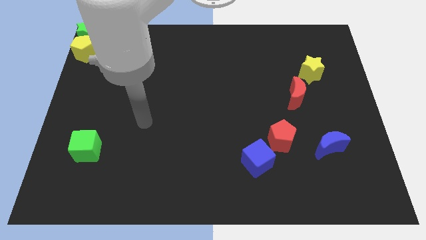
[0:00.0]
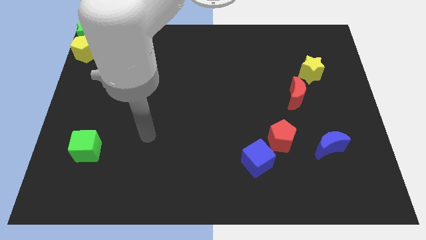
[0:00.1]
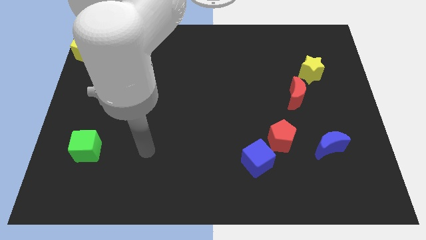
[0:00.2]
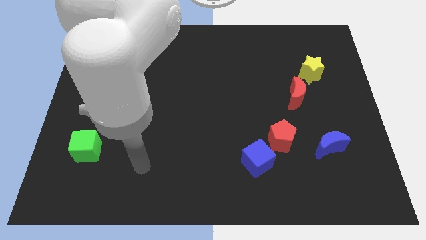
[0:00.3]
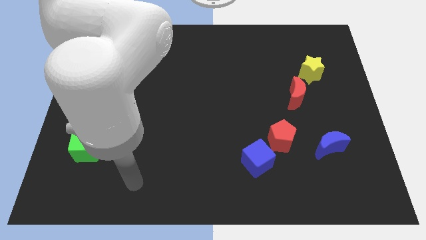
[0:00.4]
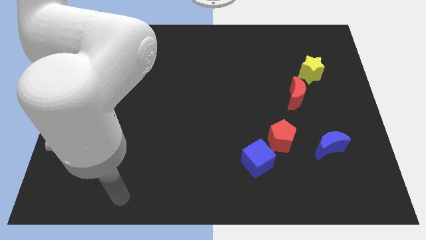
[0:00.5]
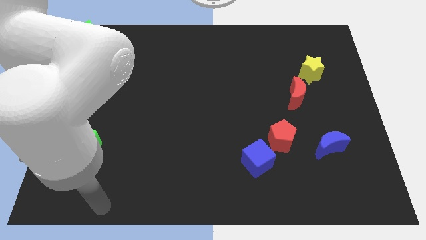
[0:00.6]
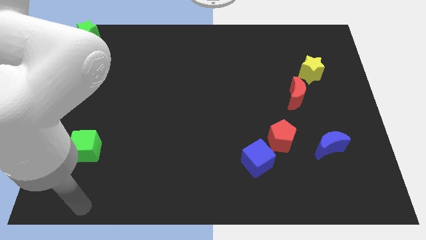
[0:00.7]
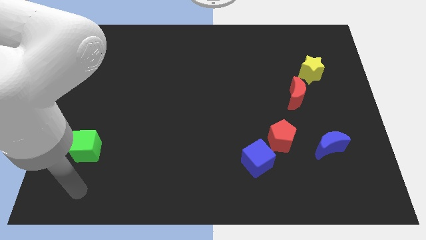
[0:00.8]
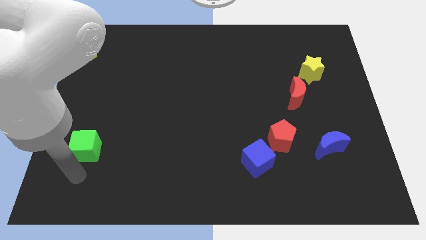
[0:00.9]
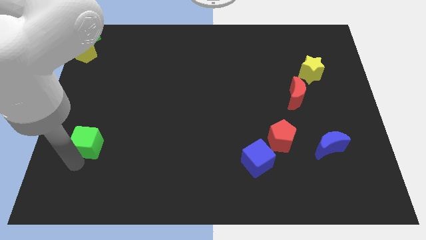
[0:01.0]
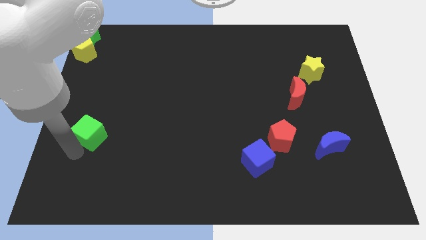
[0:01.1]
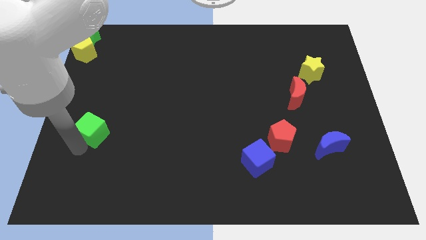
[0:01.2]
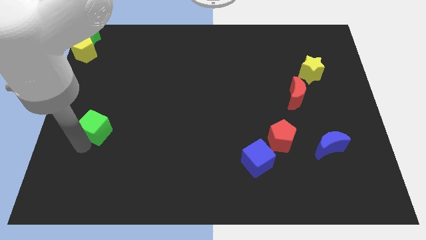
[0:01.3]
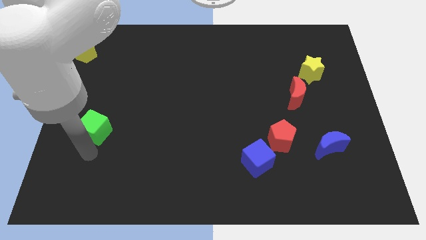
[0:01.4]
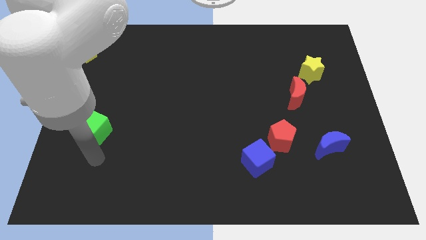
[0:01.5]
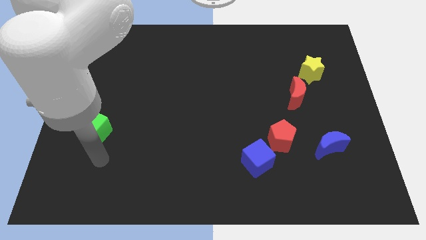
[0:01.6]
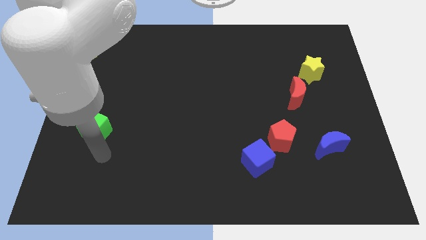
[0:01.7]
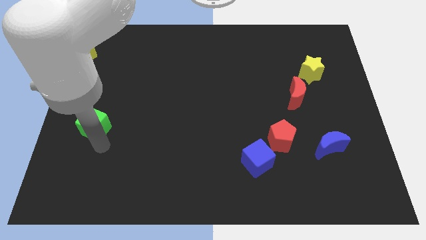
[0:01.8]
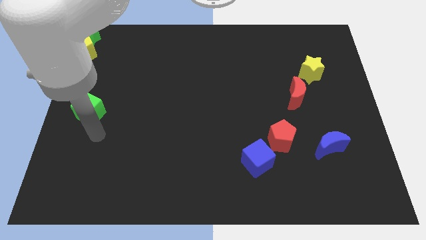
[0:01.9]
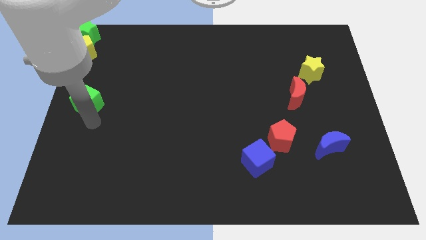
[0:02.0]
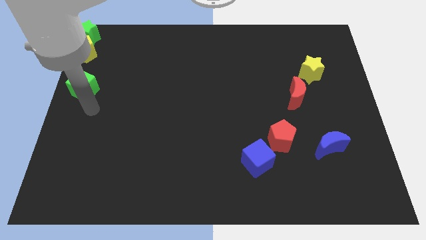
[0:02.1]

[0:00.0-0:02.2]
push the green cube towards top left

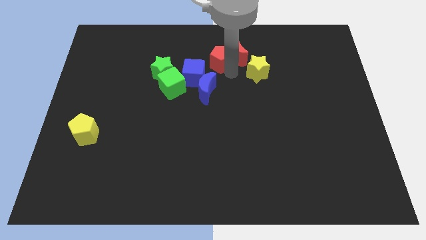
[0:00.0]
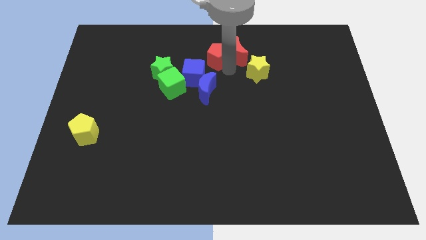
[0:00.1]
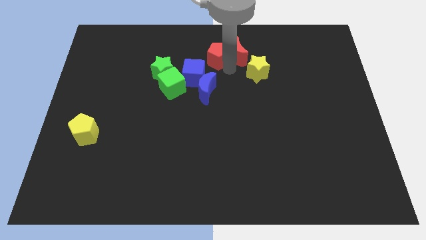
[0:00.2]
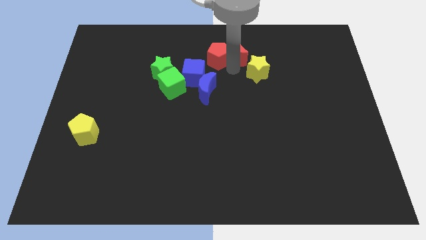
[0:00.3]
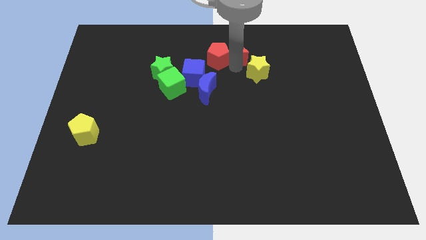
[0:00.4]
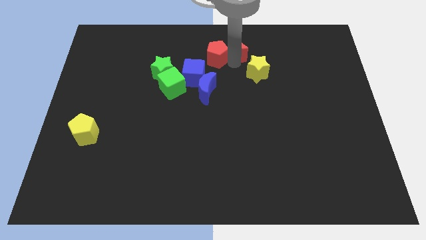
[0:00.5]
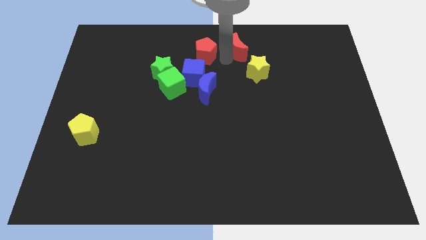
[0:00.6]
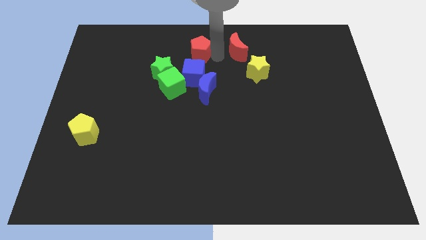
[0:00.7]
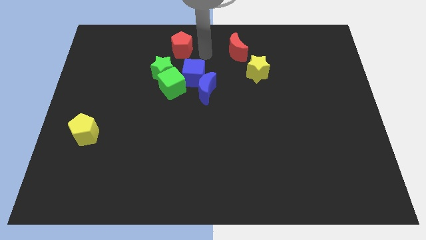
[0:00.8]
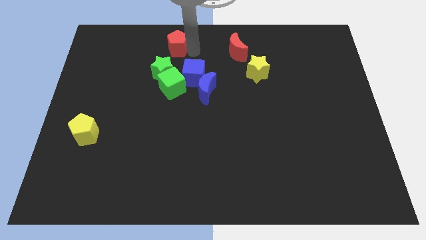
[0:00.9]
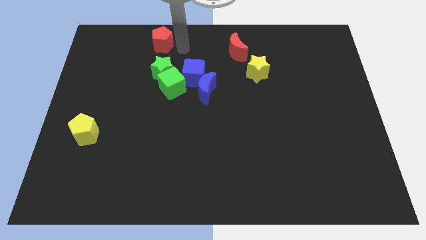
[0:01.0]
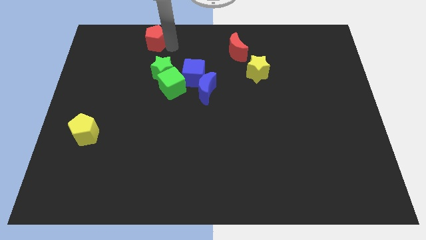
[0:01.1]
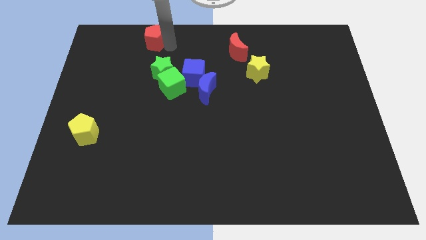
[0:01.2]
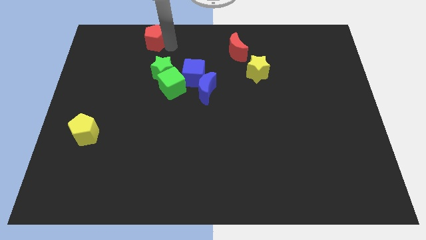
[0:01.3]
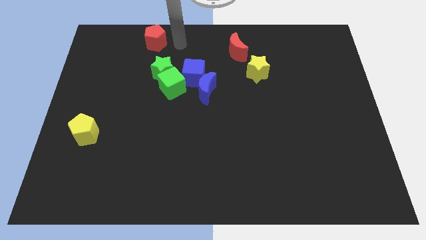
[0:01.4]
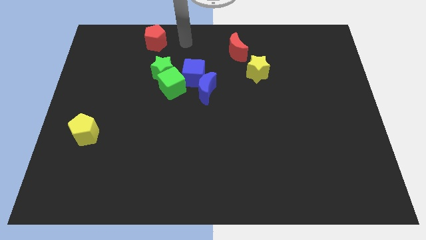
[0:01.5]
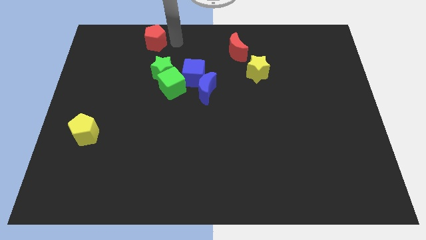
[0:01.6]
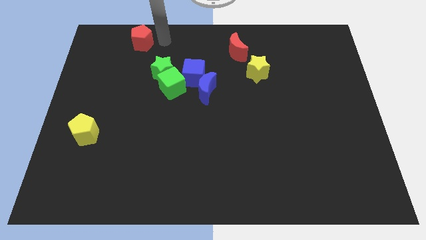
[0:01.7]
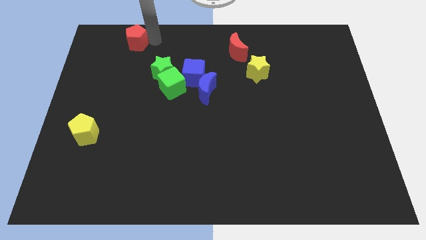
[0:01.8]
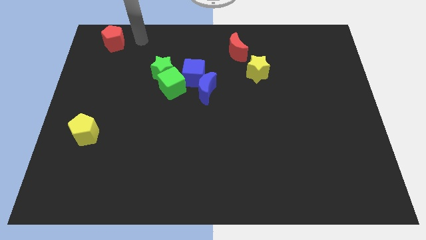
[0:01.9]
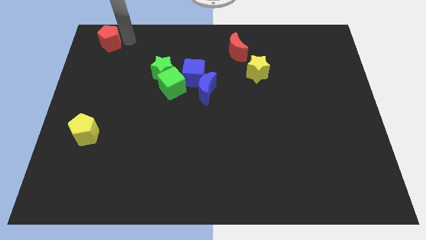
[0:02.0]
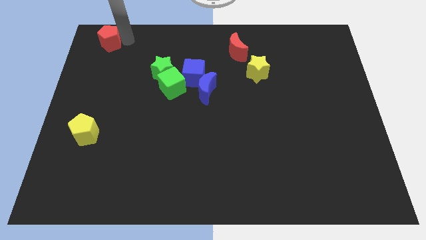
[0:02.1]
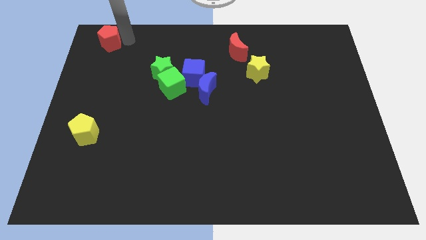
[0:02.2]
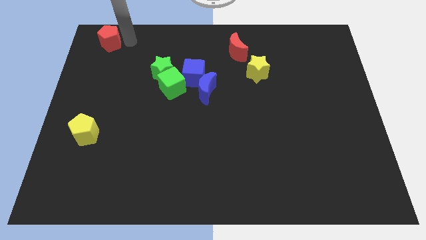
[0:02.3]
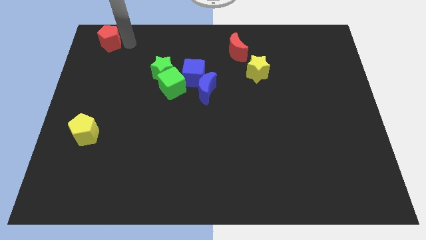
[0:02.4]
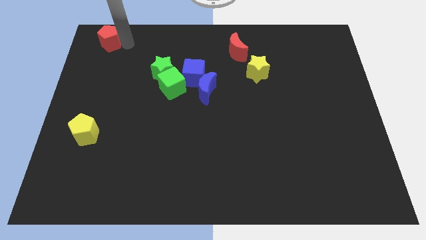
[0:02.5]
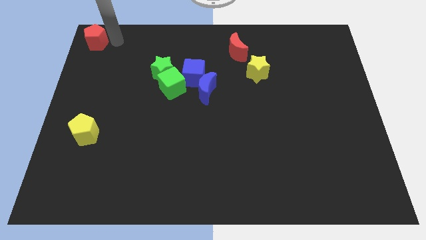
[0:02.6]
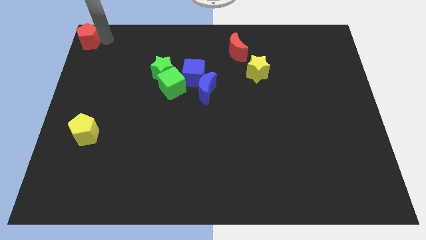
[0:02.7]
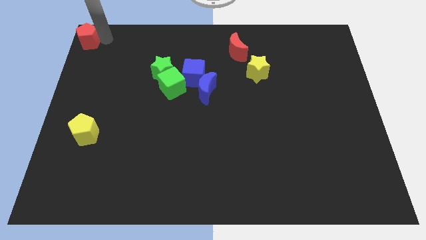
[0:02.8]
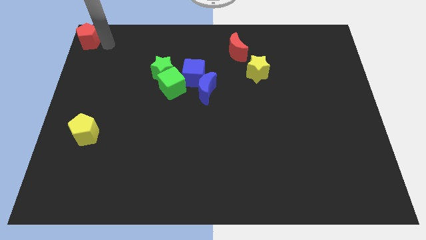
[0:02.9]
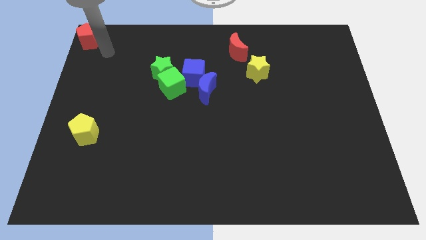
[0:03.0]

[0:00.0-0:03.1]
separate red pentagon from red moon

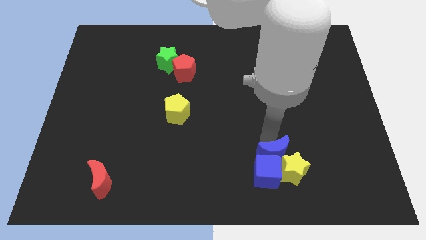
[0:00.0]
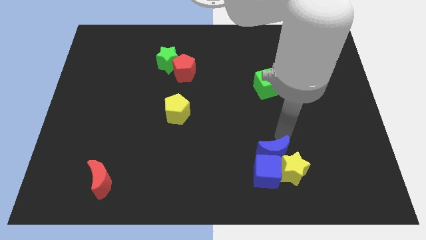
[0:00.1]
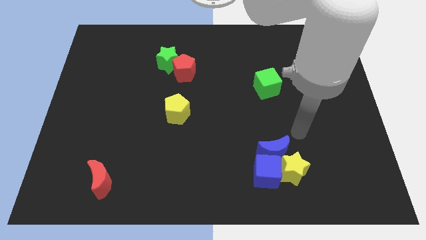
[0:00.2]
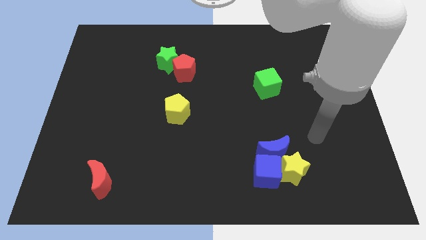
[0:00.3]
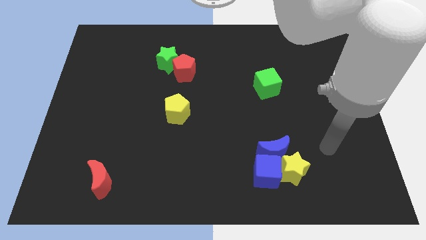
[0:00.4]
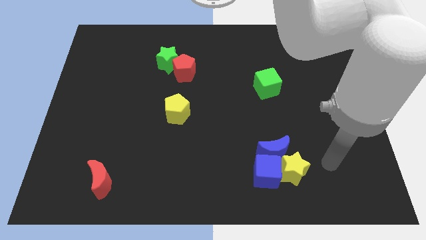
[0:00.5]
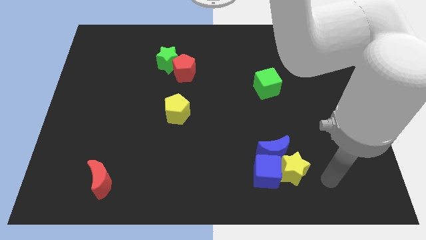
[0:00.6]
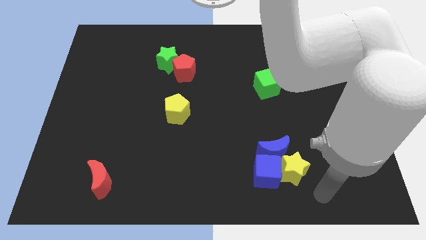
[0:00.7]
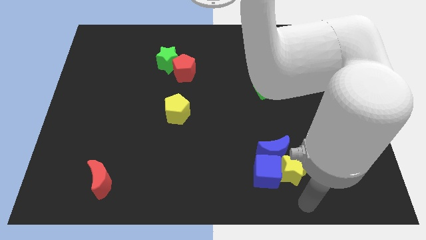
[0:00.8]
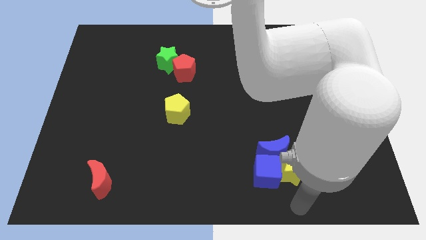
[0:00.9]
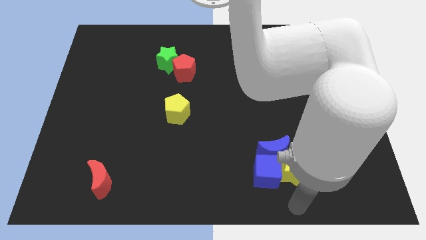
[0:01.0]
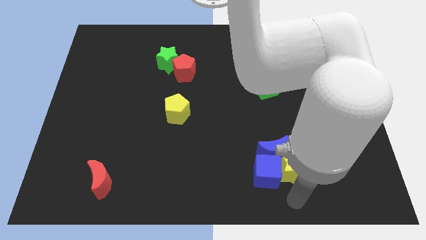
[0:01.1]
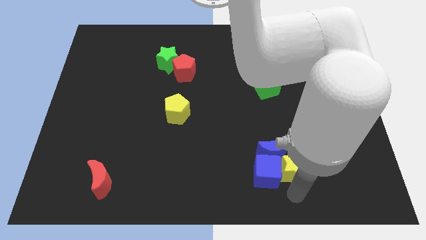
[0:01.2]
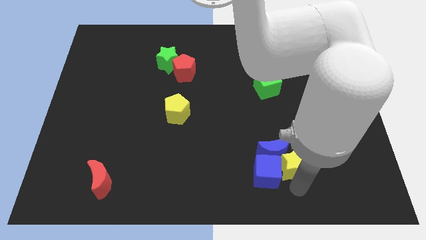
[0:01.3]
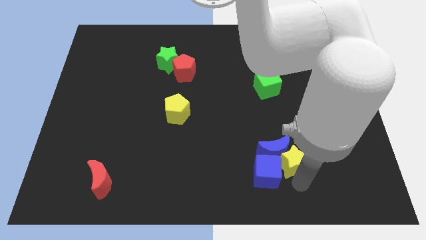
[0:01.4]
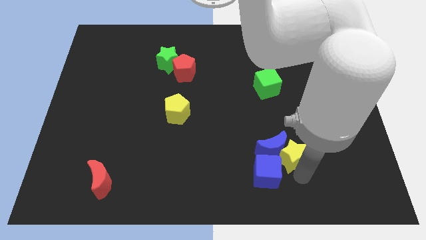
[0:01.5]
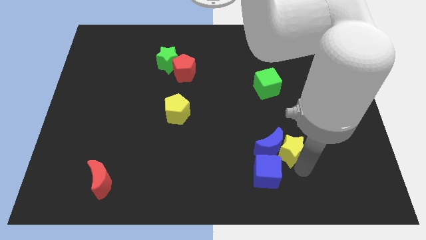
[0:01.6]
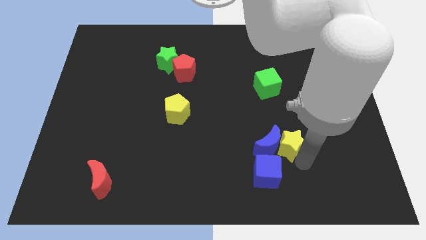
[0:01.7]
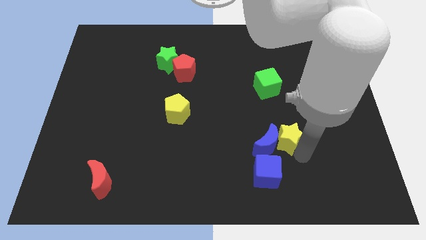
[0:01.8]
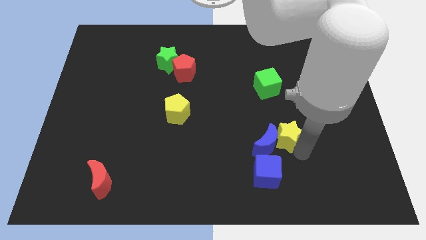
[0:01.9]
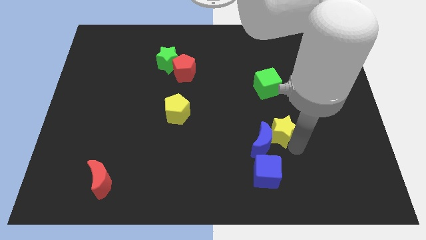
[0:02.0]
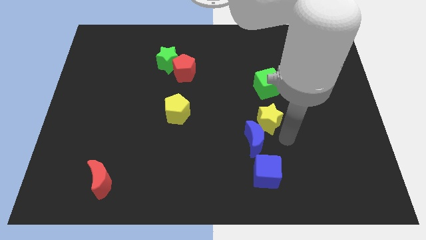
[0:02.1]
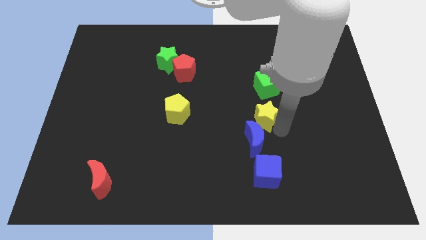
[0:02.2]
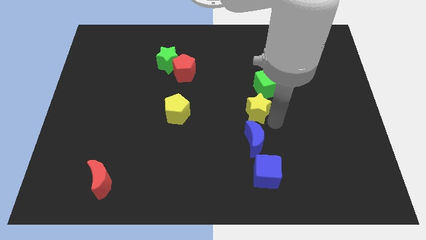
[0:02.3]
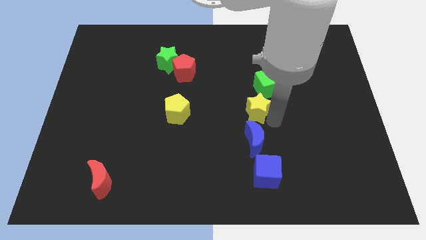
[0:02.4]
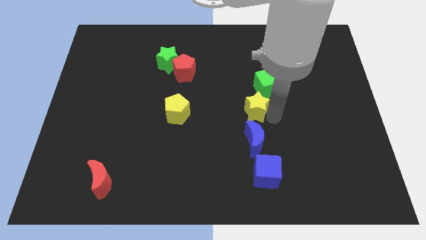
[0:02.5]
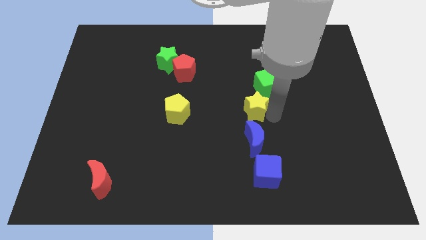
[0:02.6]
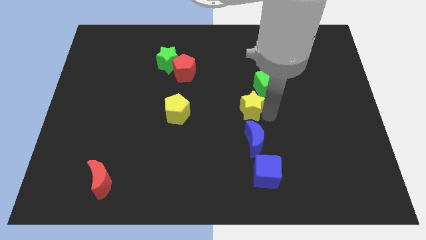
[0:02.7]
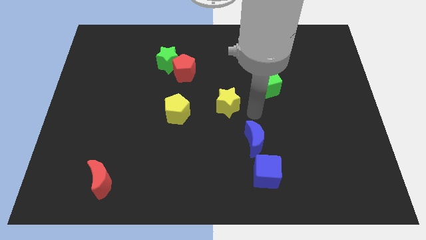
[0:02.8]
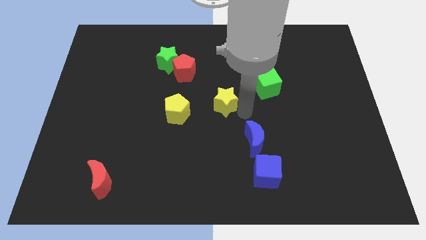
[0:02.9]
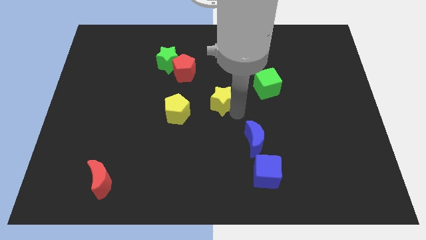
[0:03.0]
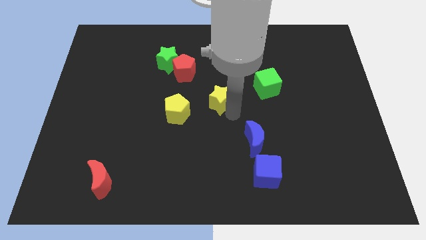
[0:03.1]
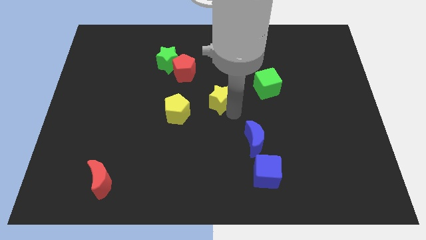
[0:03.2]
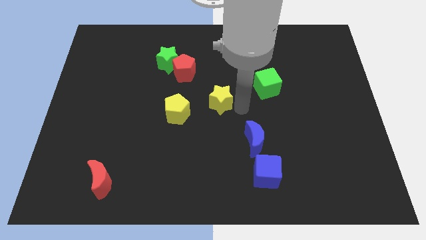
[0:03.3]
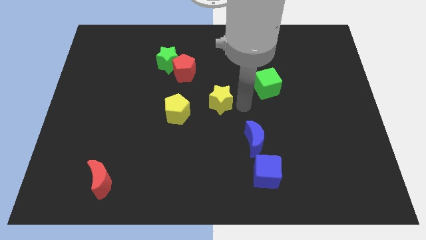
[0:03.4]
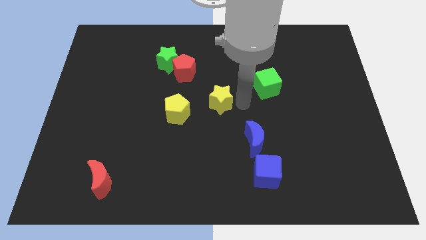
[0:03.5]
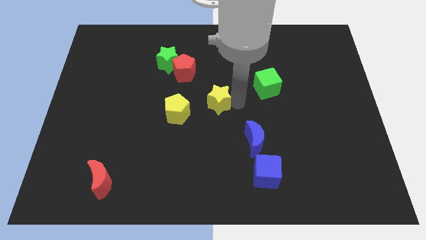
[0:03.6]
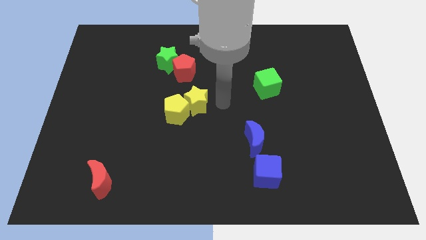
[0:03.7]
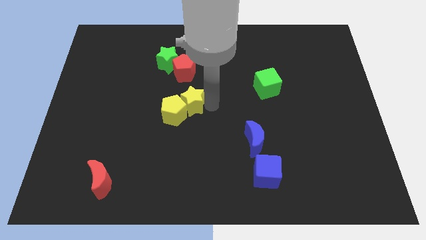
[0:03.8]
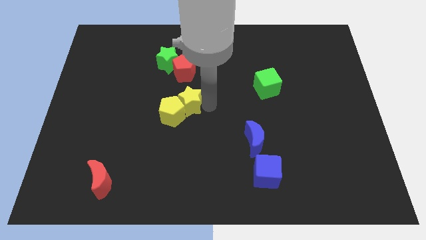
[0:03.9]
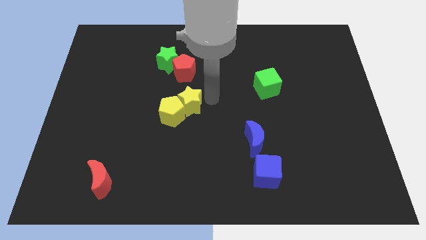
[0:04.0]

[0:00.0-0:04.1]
move the yellow star into the yellow pentagon
